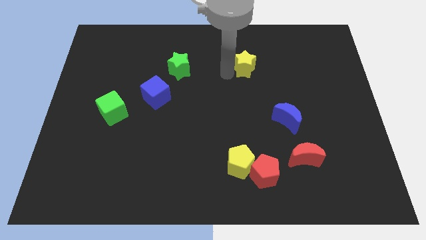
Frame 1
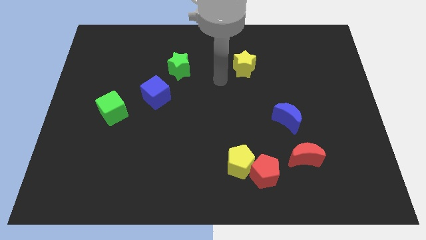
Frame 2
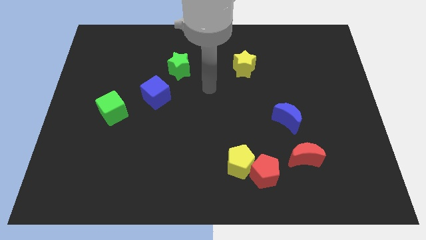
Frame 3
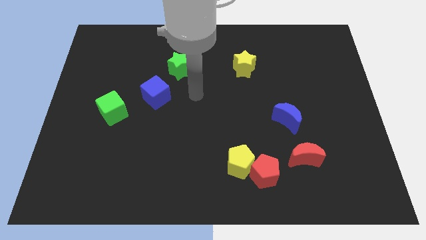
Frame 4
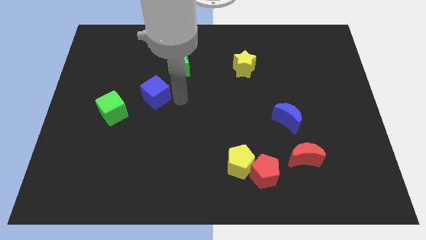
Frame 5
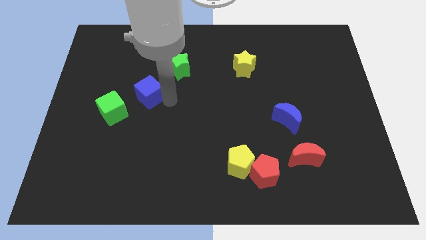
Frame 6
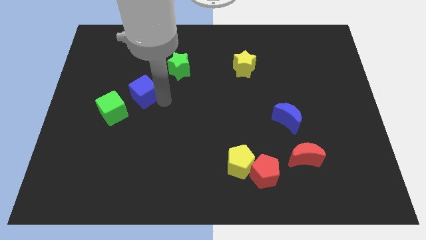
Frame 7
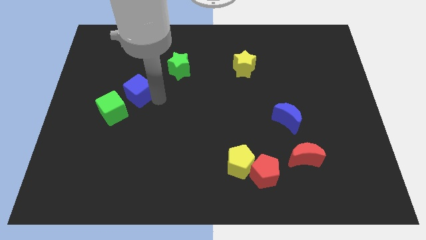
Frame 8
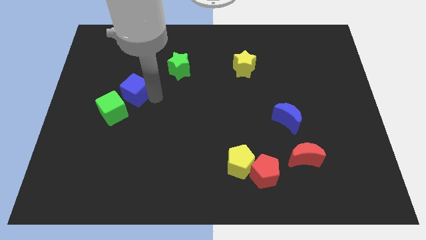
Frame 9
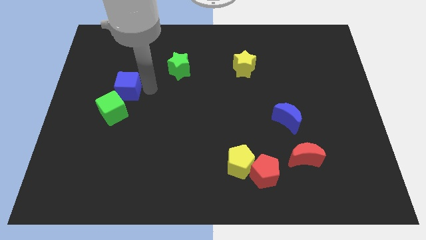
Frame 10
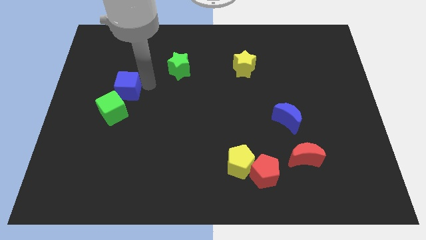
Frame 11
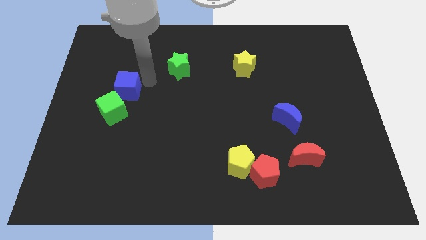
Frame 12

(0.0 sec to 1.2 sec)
push the blue cube close to green cube

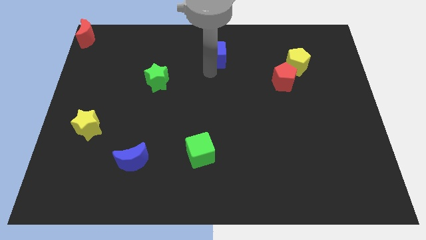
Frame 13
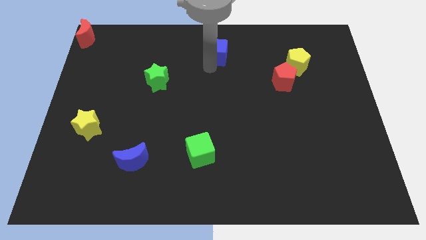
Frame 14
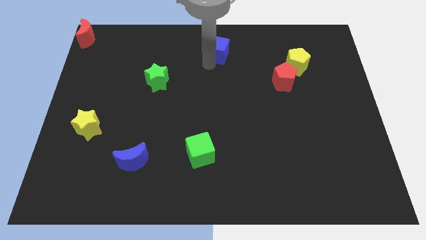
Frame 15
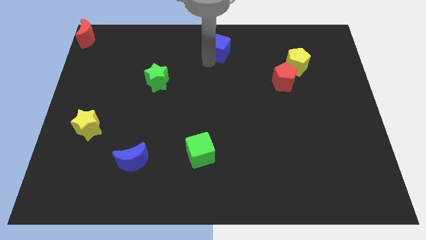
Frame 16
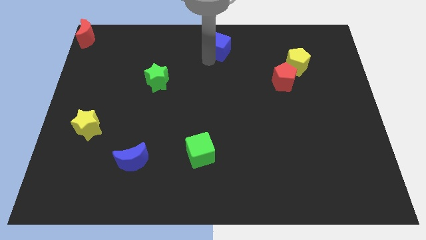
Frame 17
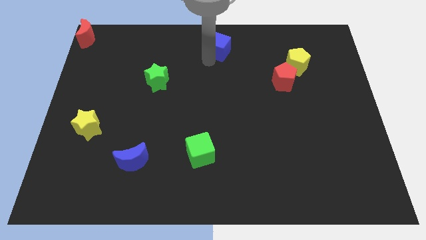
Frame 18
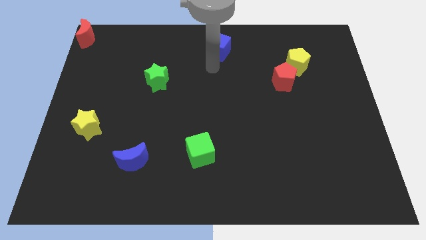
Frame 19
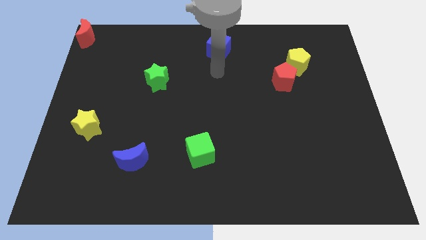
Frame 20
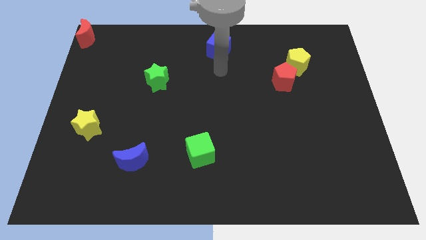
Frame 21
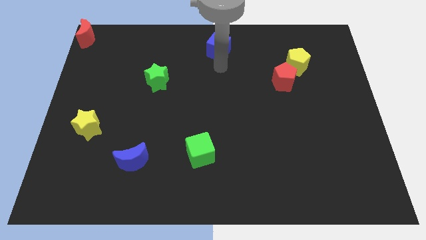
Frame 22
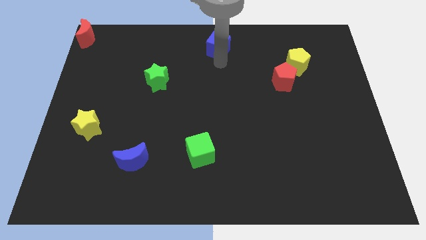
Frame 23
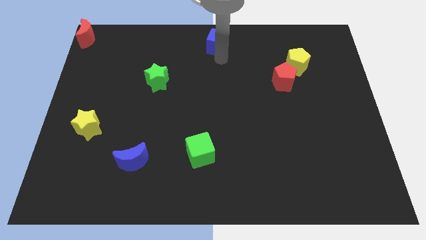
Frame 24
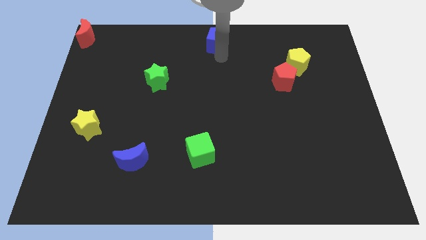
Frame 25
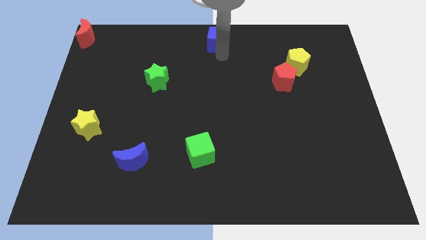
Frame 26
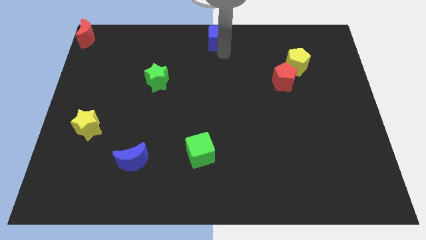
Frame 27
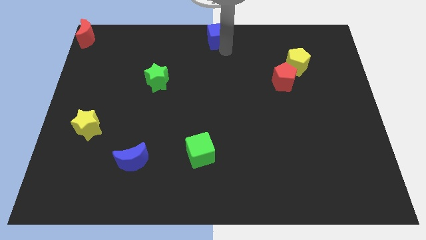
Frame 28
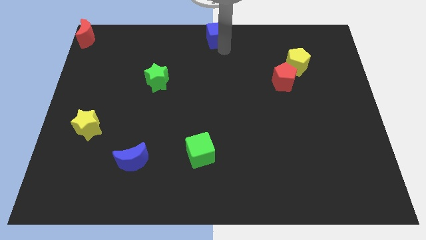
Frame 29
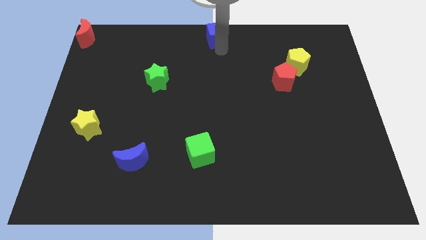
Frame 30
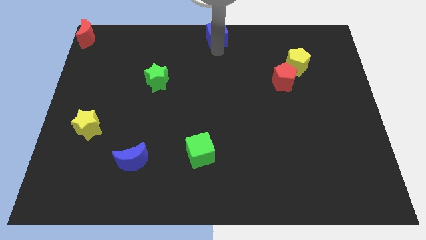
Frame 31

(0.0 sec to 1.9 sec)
move the blue cube to the top center

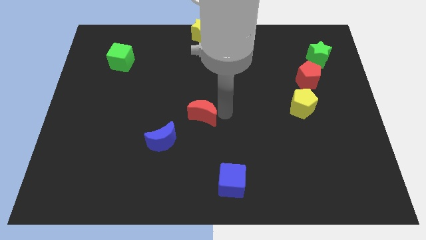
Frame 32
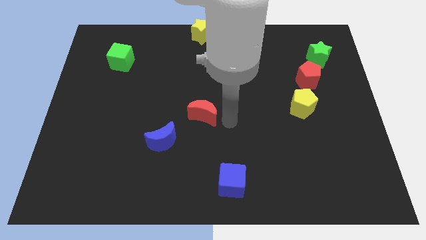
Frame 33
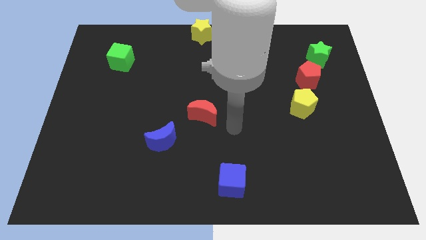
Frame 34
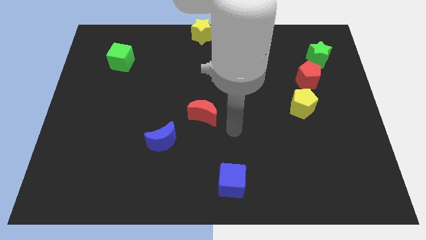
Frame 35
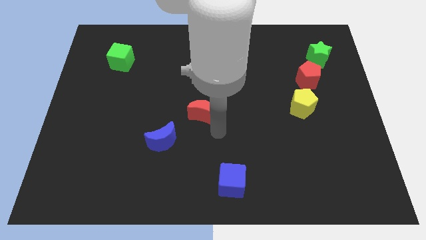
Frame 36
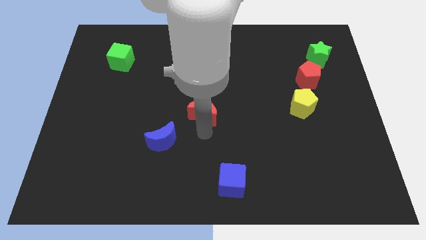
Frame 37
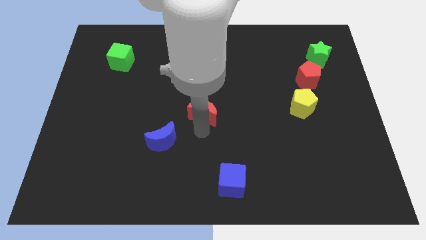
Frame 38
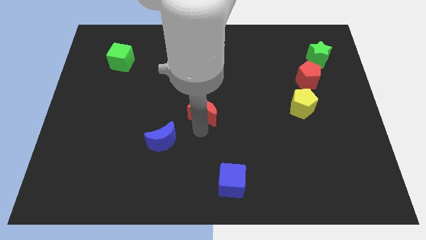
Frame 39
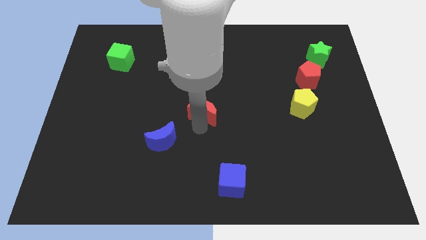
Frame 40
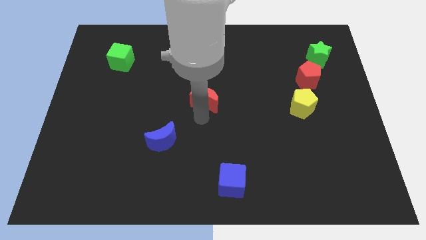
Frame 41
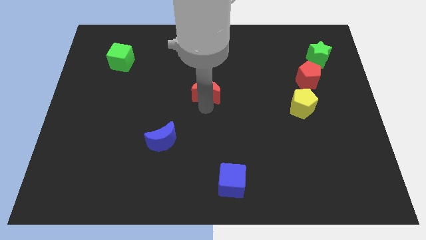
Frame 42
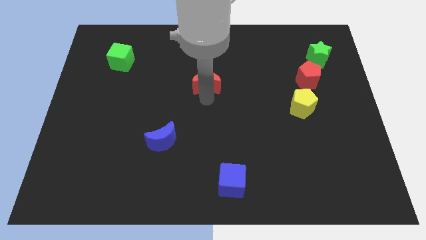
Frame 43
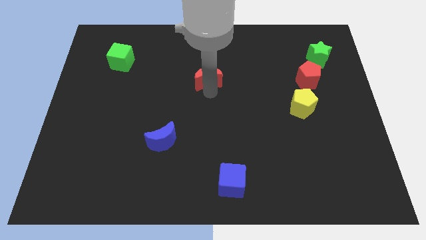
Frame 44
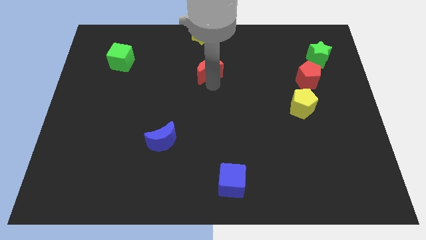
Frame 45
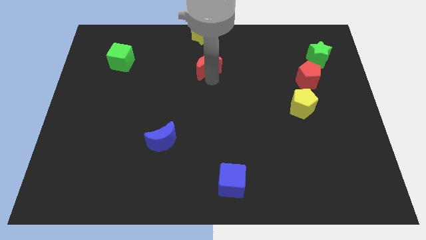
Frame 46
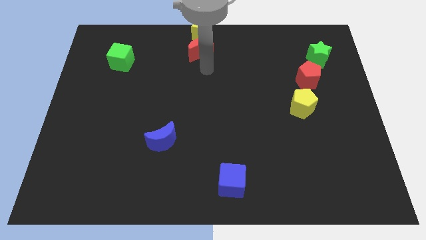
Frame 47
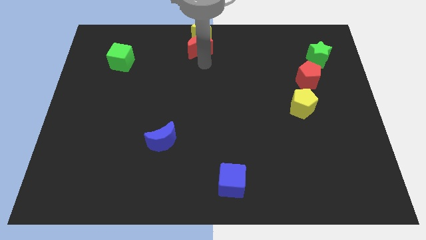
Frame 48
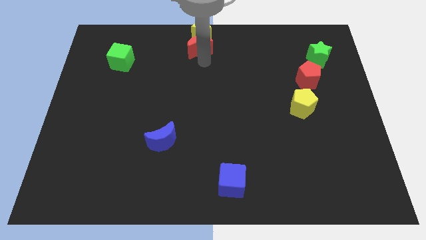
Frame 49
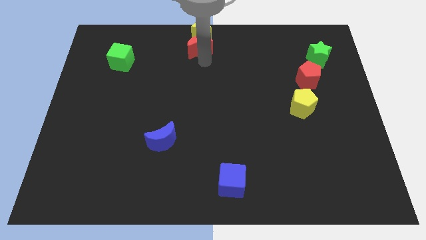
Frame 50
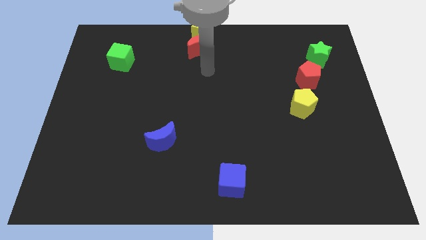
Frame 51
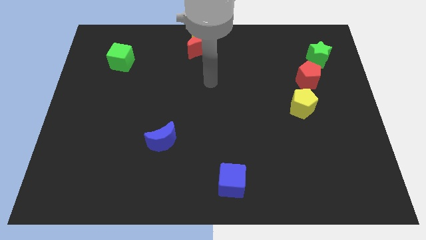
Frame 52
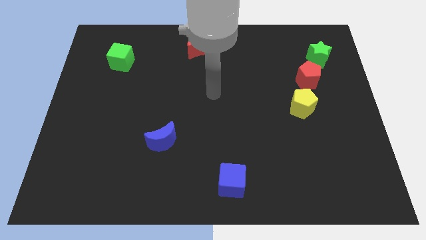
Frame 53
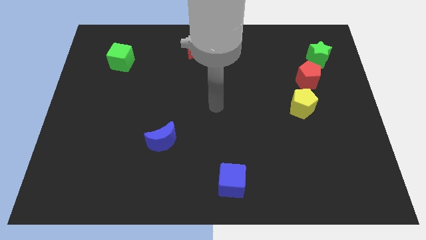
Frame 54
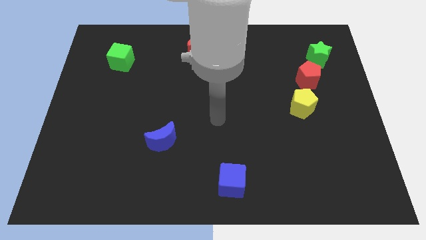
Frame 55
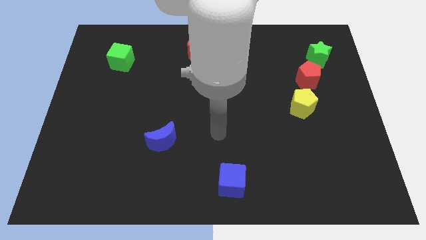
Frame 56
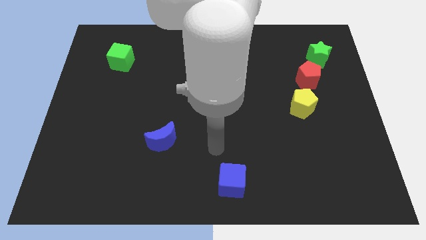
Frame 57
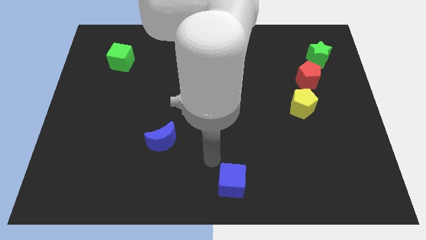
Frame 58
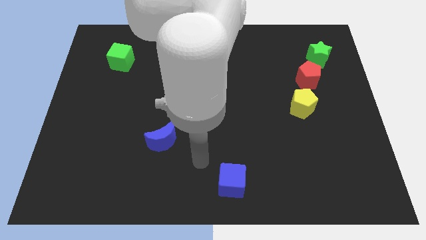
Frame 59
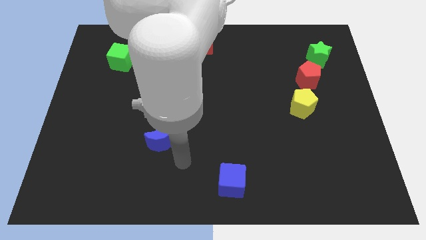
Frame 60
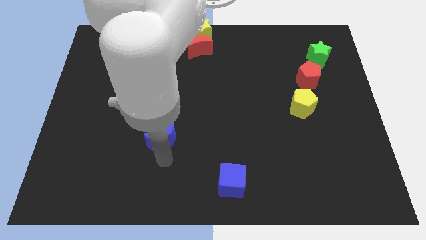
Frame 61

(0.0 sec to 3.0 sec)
push the red crescent below to the yellow star

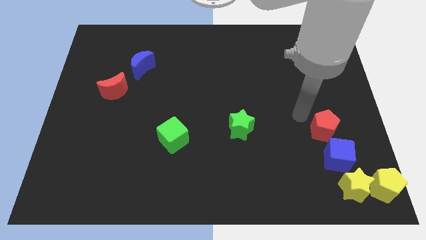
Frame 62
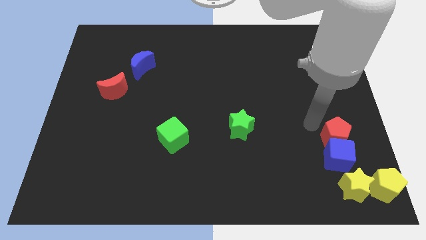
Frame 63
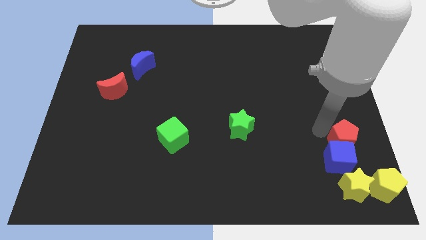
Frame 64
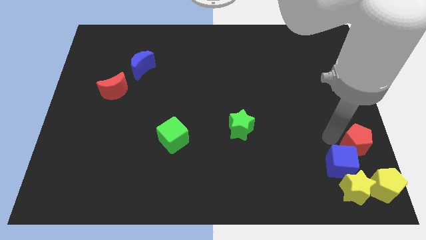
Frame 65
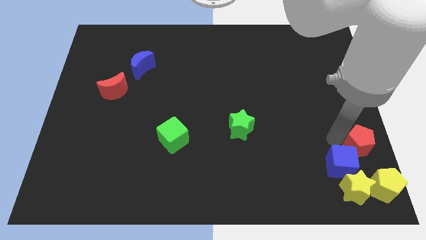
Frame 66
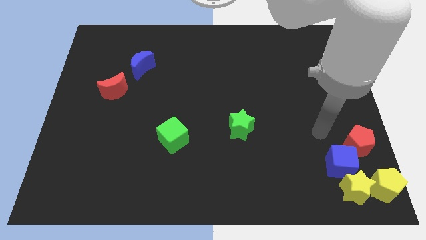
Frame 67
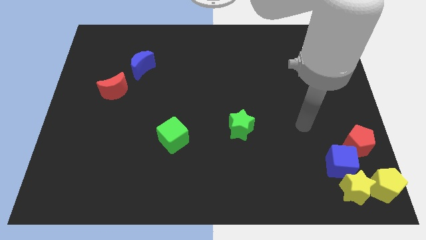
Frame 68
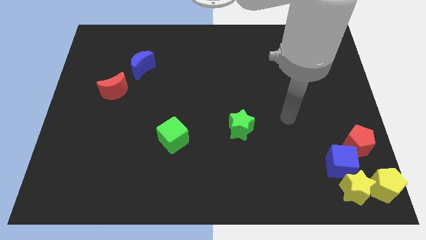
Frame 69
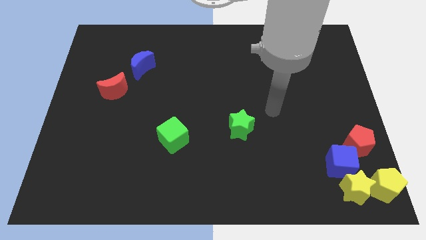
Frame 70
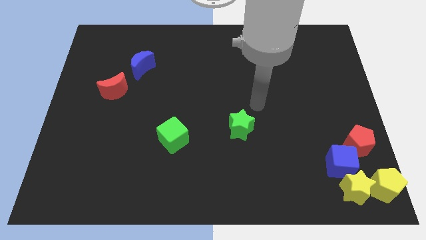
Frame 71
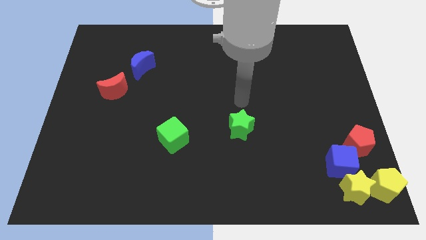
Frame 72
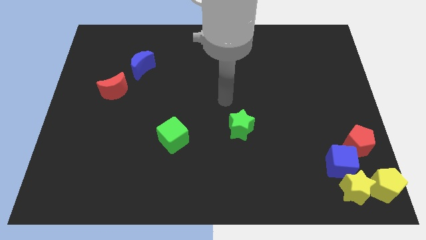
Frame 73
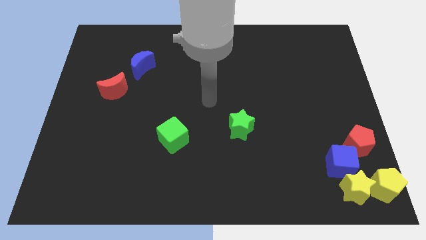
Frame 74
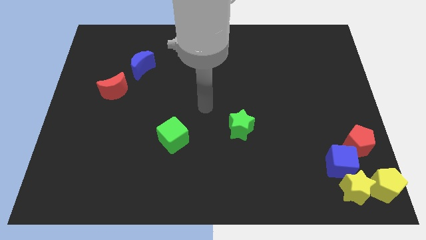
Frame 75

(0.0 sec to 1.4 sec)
move your arm to the center of the board

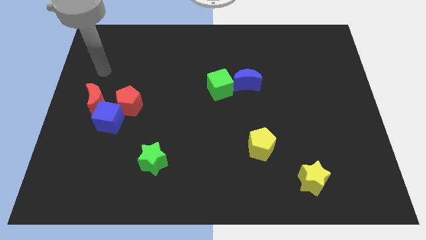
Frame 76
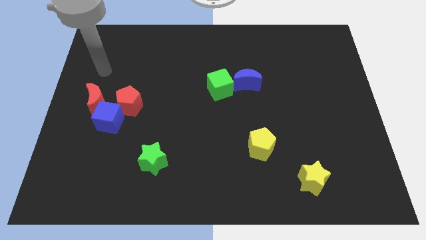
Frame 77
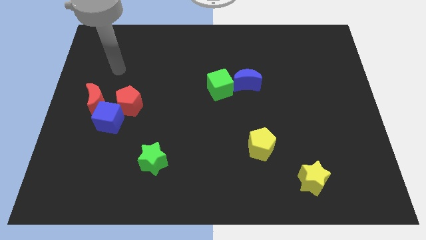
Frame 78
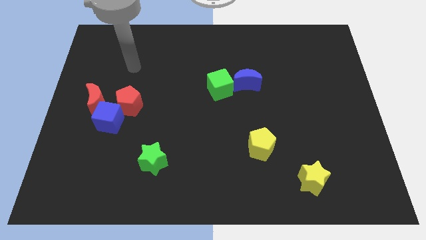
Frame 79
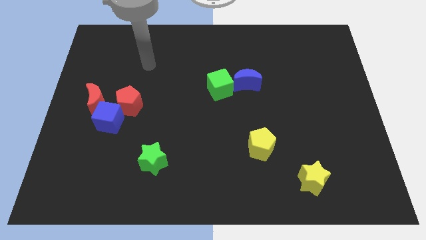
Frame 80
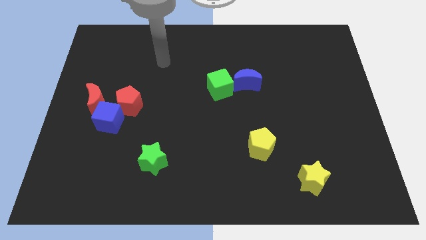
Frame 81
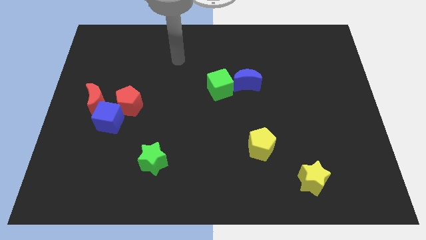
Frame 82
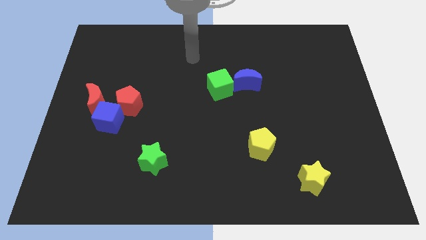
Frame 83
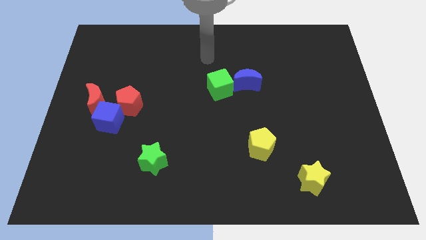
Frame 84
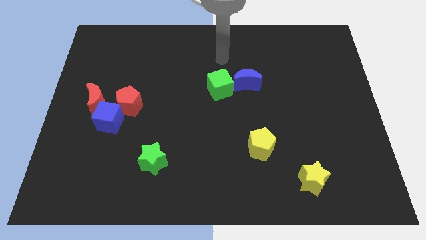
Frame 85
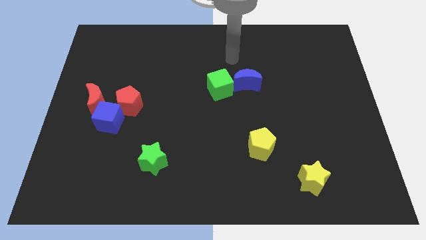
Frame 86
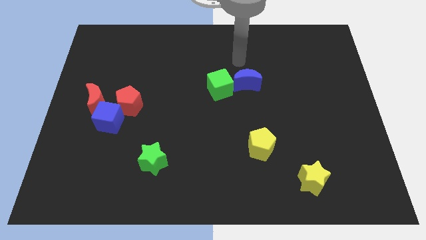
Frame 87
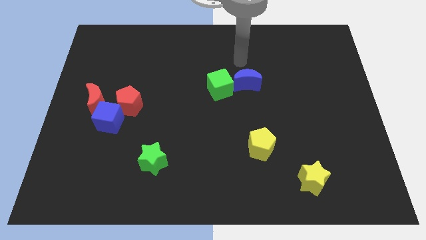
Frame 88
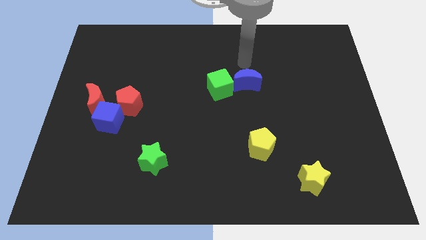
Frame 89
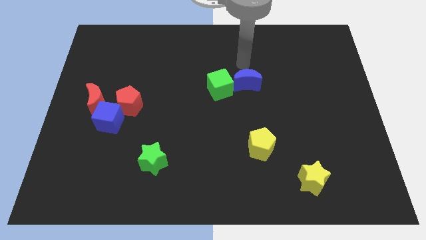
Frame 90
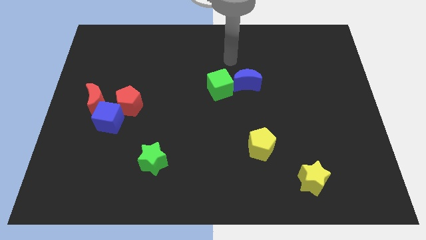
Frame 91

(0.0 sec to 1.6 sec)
point your arm above blue moon
